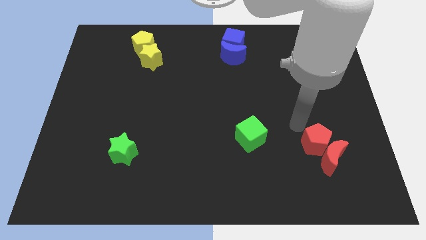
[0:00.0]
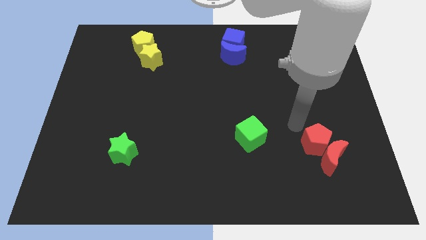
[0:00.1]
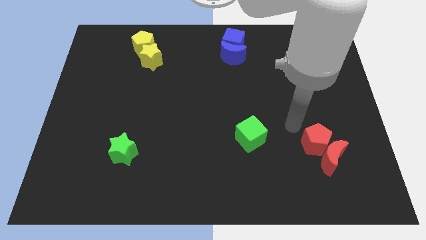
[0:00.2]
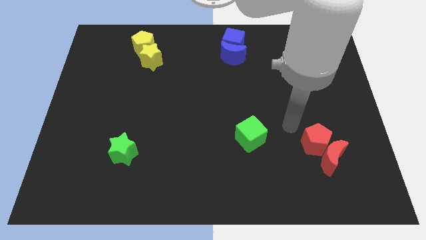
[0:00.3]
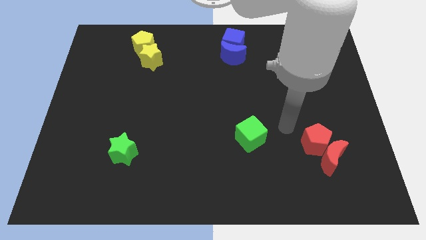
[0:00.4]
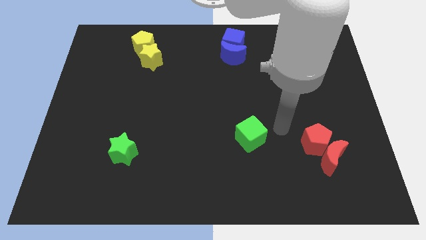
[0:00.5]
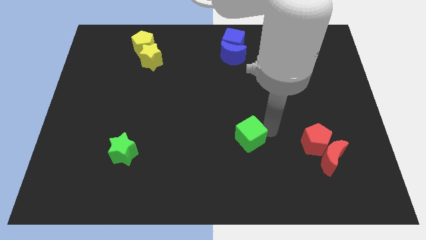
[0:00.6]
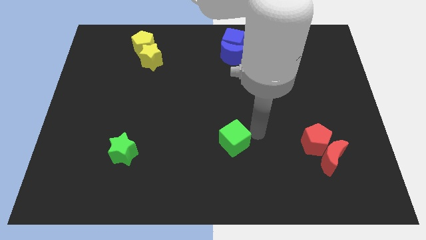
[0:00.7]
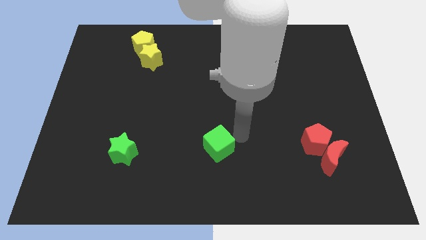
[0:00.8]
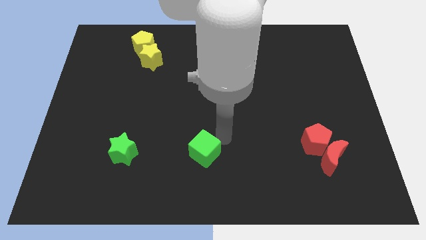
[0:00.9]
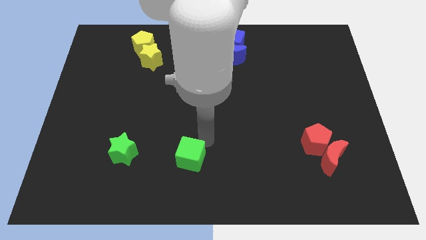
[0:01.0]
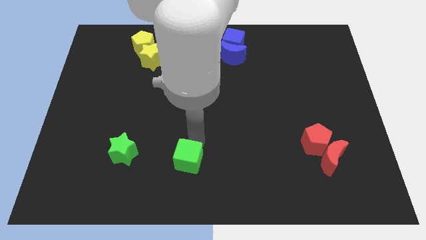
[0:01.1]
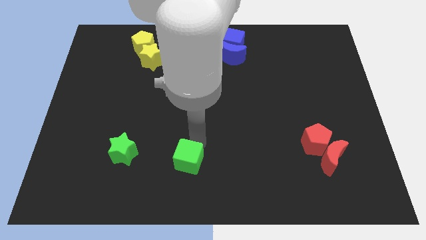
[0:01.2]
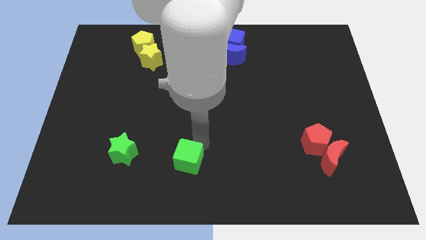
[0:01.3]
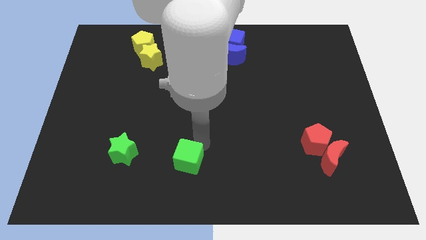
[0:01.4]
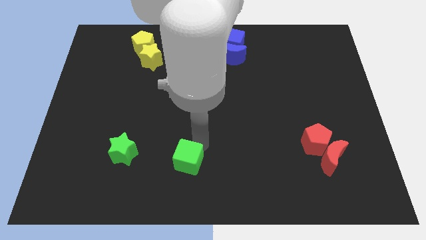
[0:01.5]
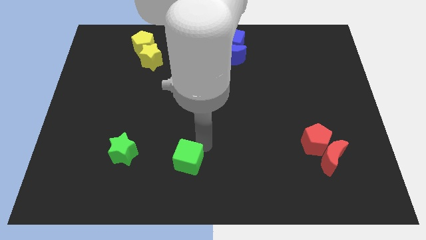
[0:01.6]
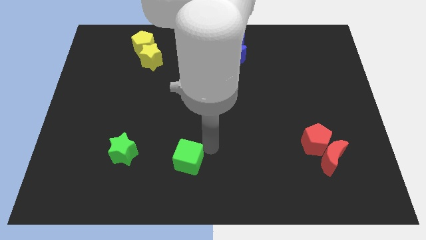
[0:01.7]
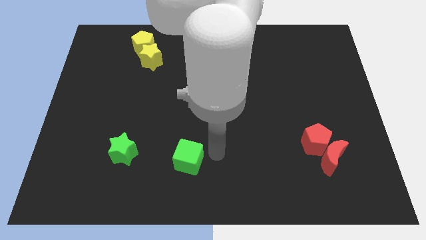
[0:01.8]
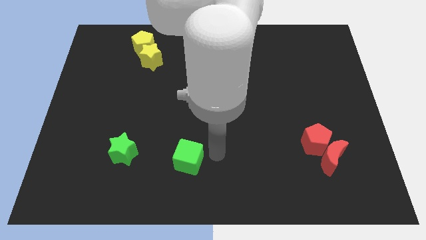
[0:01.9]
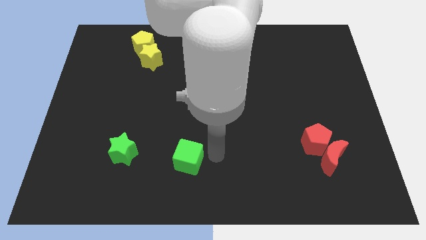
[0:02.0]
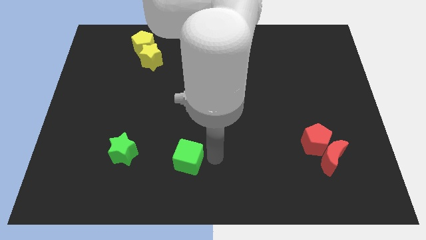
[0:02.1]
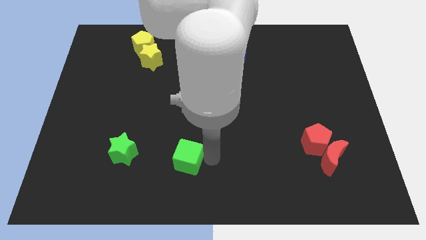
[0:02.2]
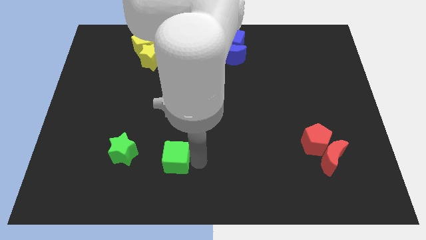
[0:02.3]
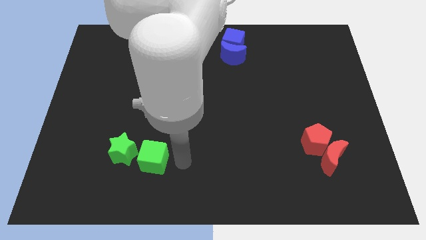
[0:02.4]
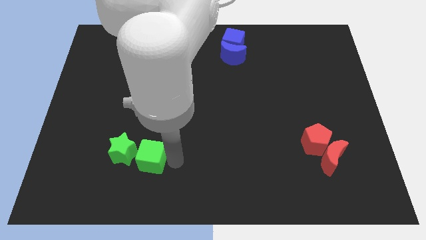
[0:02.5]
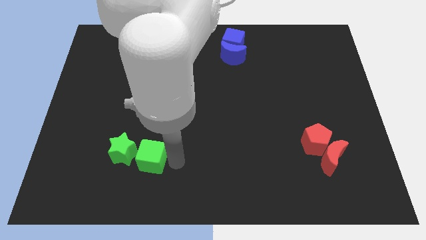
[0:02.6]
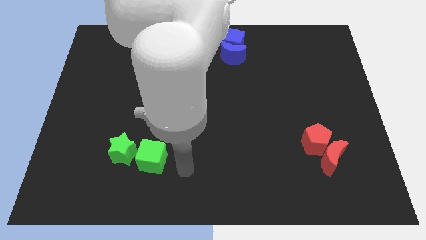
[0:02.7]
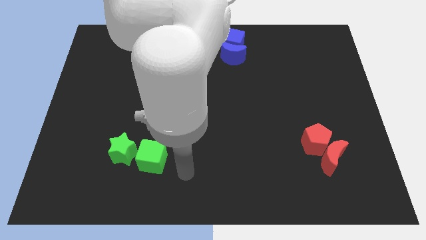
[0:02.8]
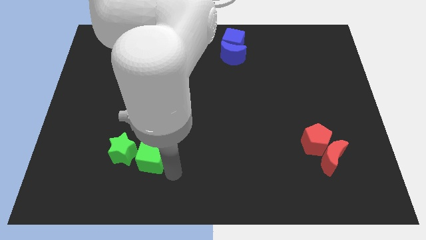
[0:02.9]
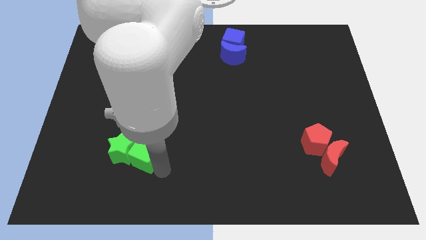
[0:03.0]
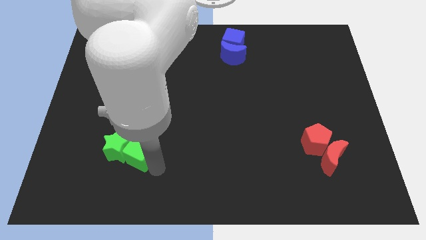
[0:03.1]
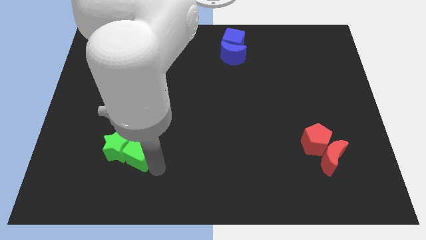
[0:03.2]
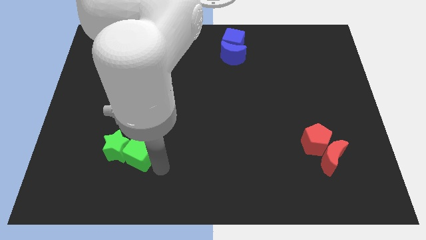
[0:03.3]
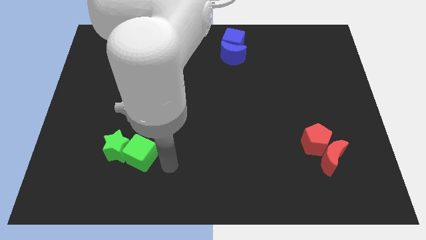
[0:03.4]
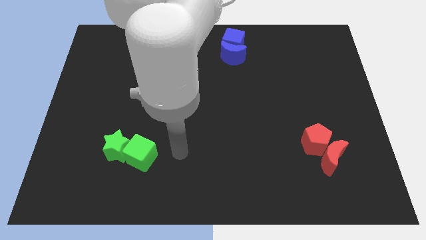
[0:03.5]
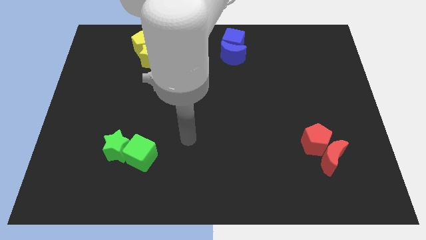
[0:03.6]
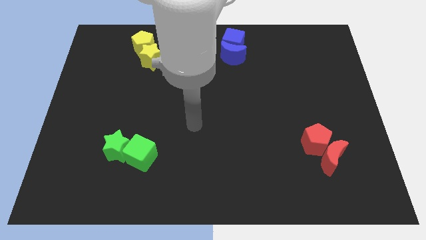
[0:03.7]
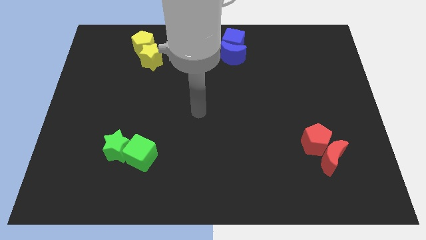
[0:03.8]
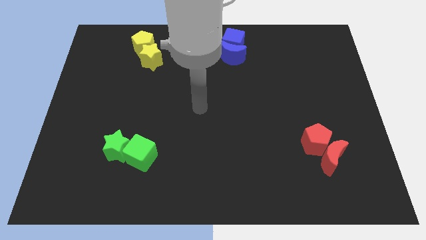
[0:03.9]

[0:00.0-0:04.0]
push green cube into green star

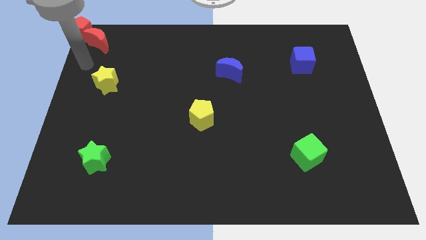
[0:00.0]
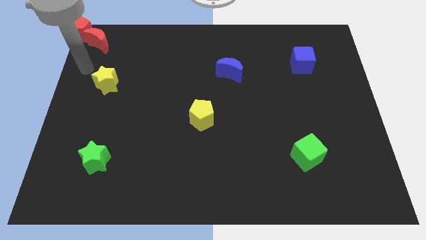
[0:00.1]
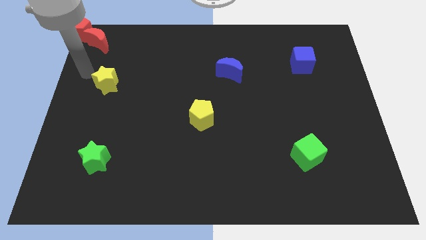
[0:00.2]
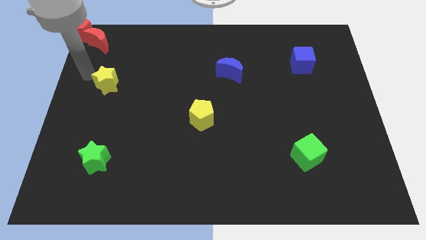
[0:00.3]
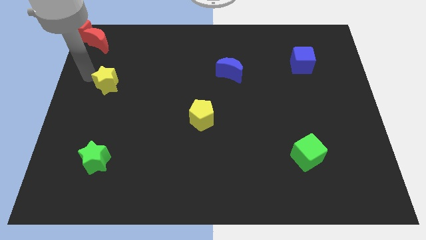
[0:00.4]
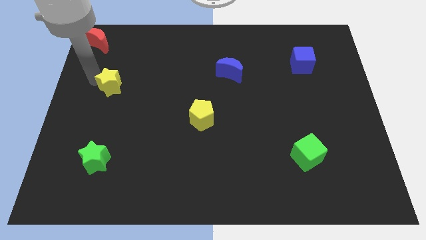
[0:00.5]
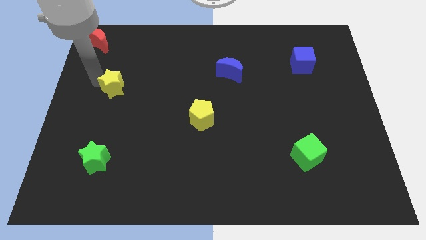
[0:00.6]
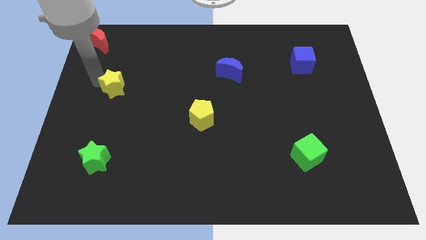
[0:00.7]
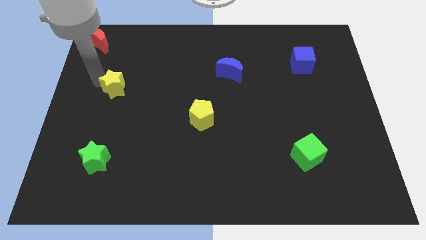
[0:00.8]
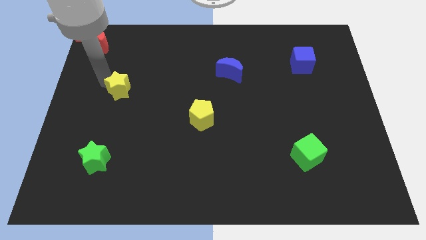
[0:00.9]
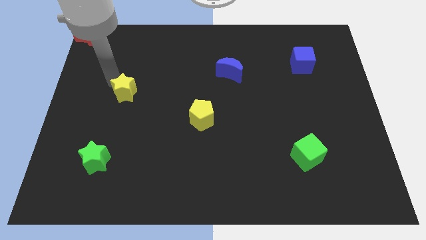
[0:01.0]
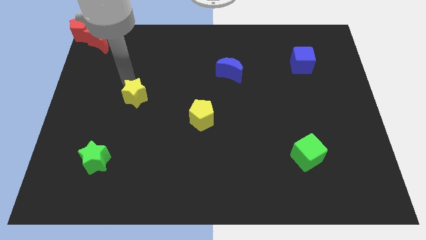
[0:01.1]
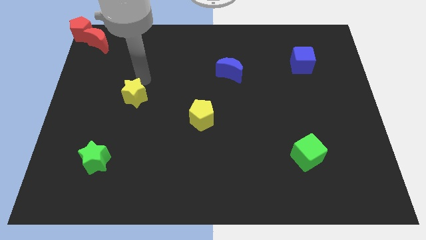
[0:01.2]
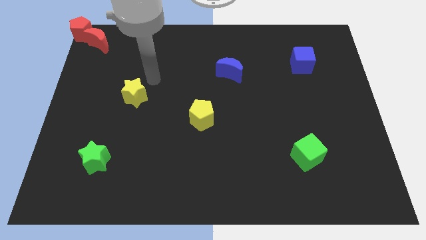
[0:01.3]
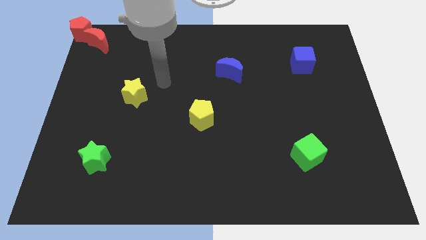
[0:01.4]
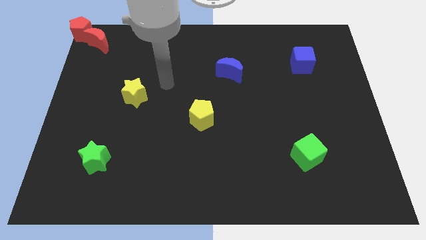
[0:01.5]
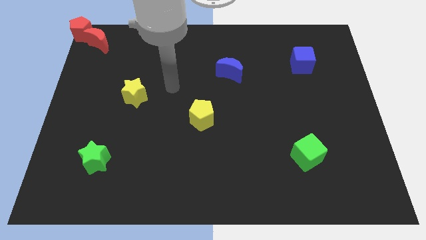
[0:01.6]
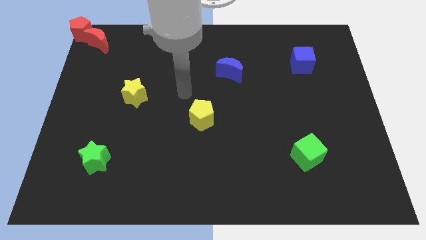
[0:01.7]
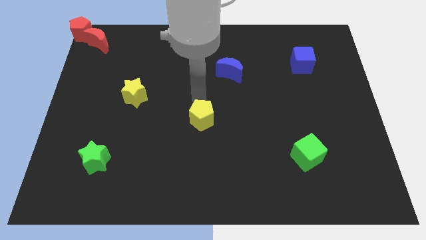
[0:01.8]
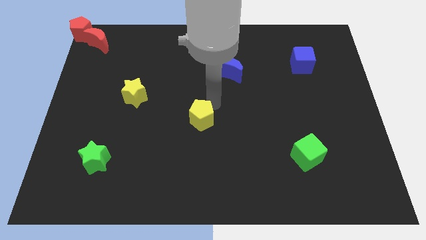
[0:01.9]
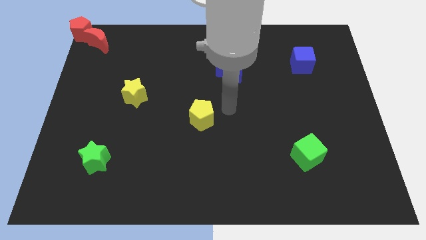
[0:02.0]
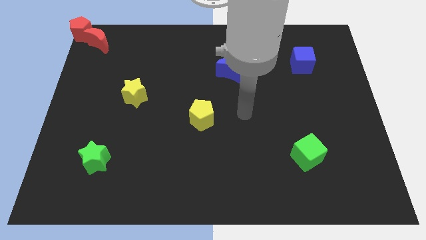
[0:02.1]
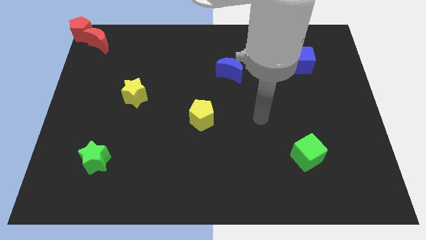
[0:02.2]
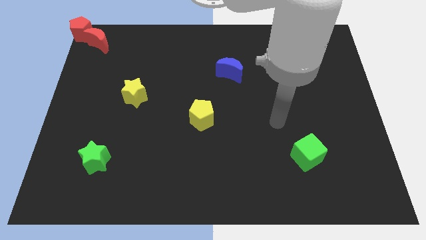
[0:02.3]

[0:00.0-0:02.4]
move the yellow star diagonal to the yellow pentagon

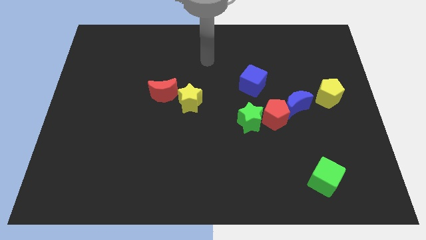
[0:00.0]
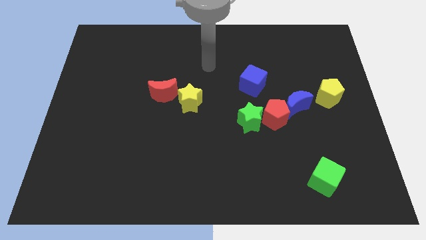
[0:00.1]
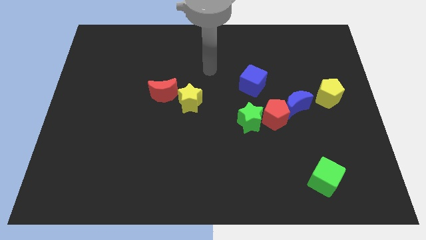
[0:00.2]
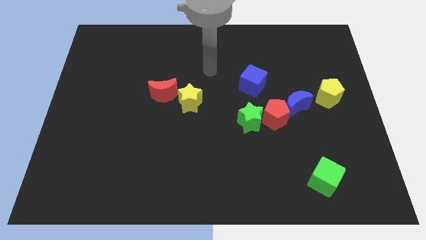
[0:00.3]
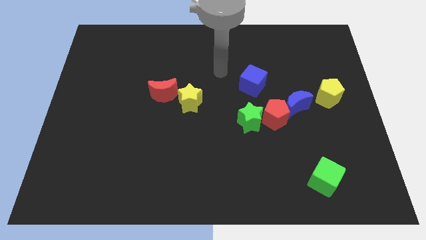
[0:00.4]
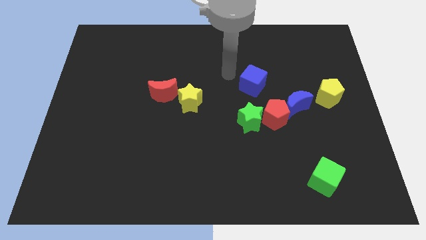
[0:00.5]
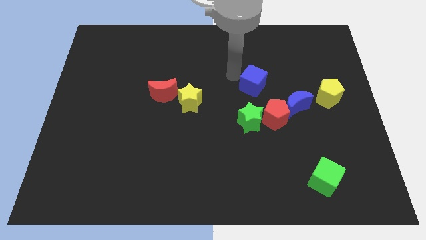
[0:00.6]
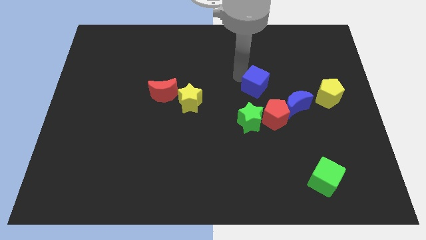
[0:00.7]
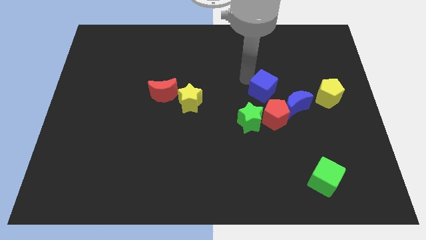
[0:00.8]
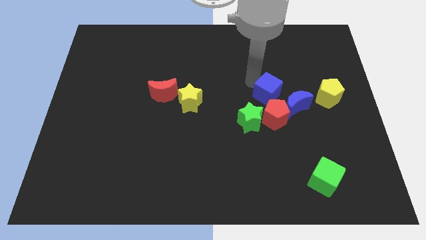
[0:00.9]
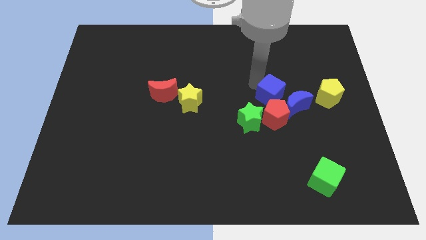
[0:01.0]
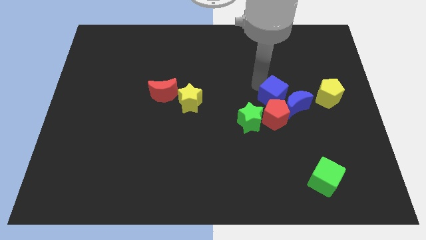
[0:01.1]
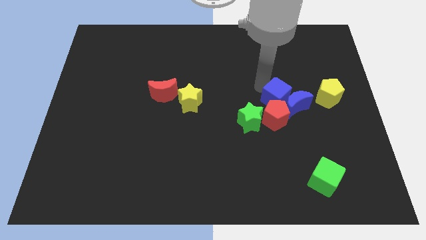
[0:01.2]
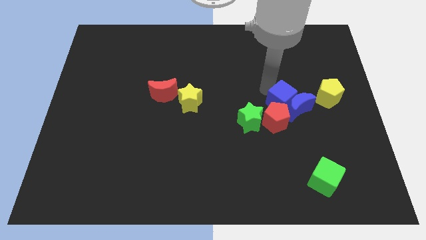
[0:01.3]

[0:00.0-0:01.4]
move the blue cube close to blue crescent

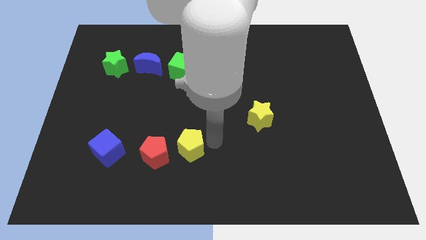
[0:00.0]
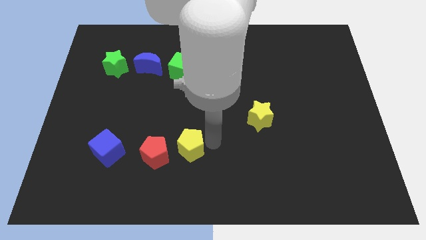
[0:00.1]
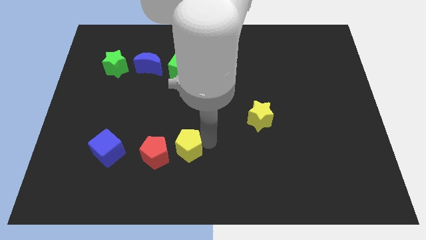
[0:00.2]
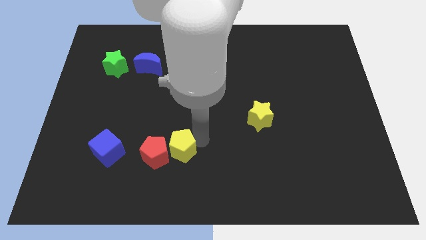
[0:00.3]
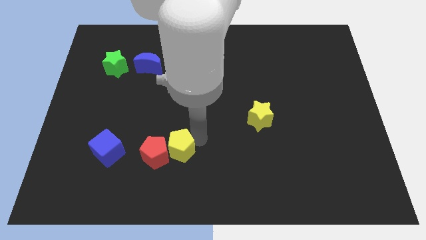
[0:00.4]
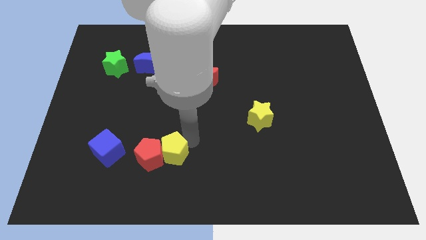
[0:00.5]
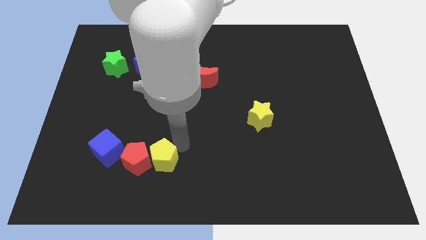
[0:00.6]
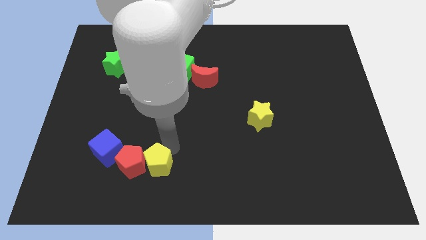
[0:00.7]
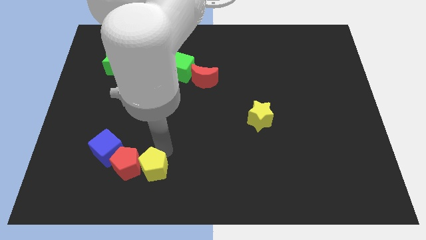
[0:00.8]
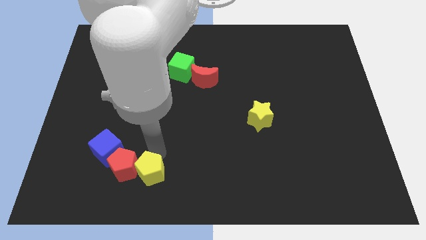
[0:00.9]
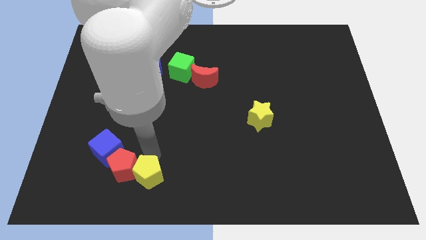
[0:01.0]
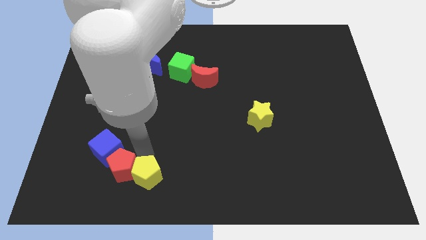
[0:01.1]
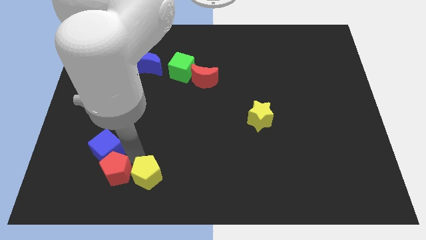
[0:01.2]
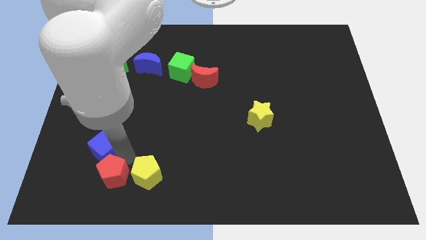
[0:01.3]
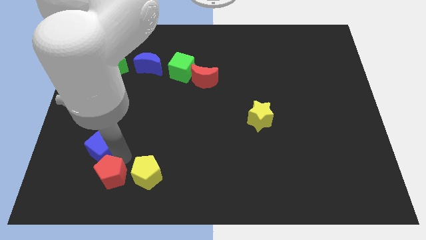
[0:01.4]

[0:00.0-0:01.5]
push the yellow pentagon into the red pentagon
